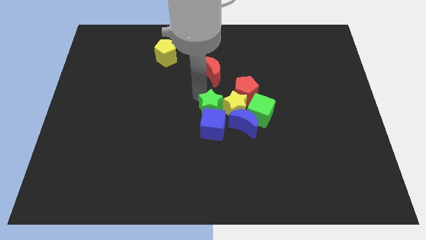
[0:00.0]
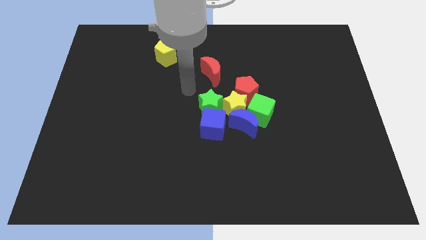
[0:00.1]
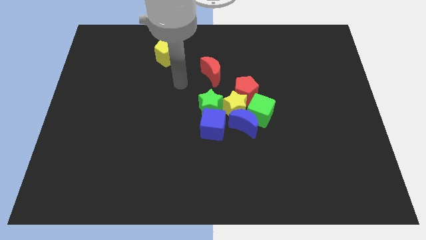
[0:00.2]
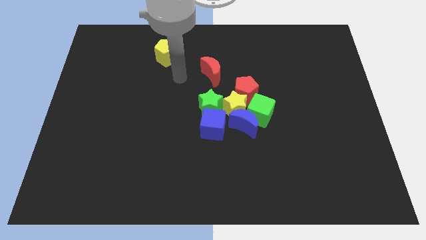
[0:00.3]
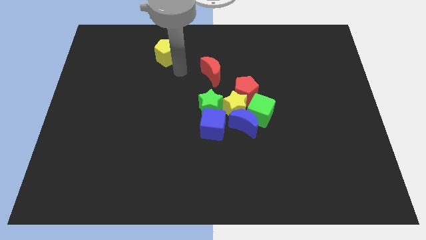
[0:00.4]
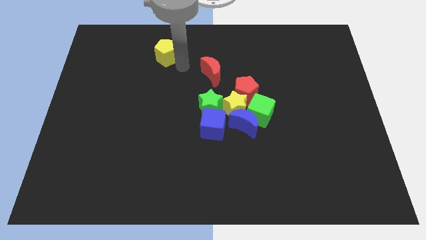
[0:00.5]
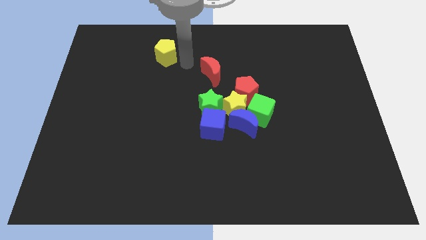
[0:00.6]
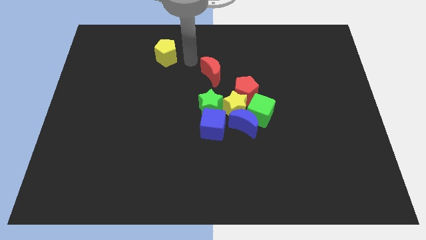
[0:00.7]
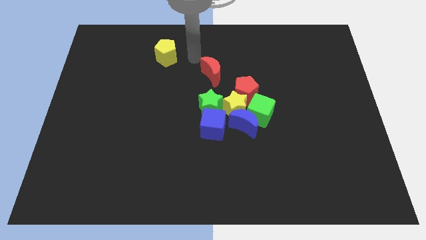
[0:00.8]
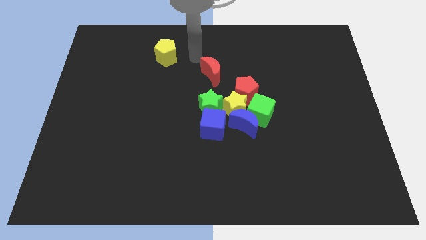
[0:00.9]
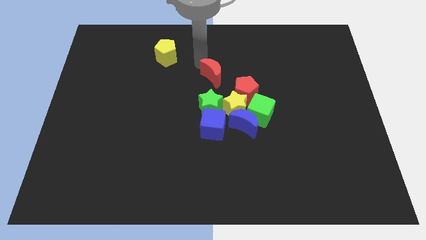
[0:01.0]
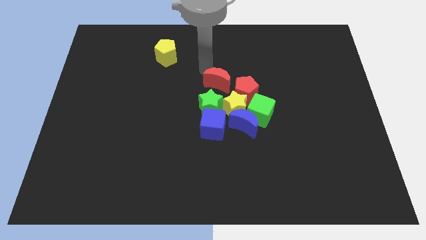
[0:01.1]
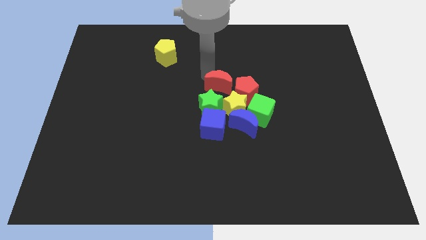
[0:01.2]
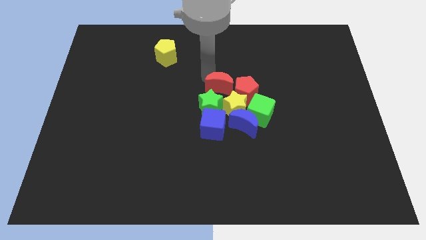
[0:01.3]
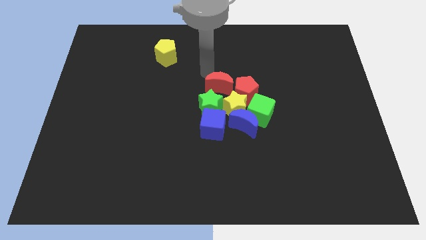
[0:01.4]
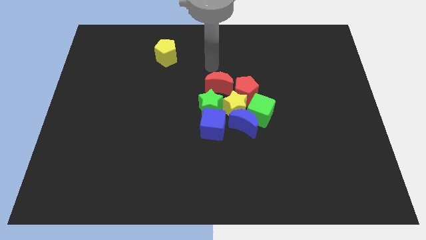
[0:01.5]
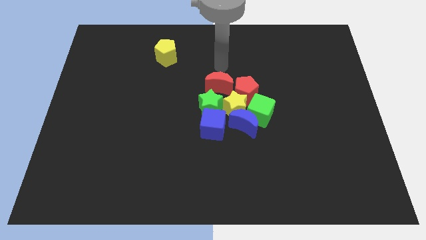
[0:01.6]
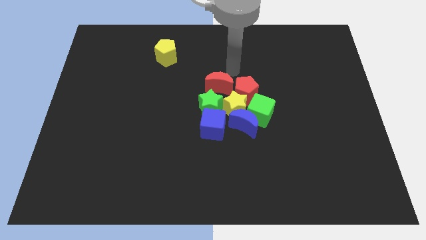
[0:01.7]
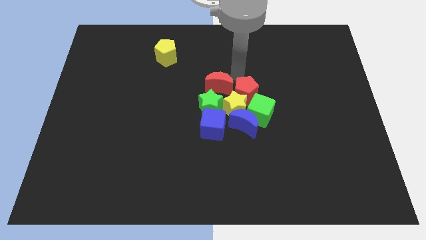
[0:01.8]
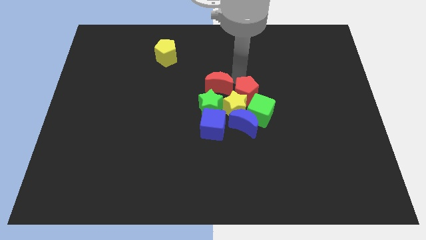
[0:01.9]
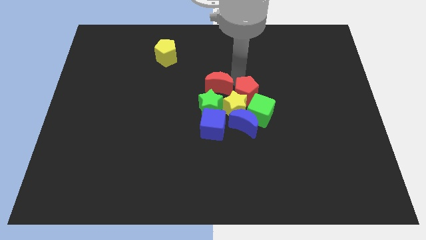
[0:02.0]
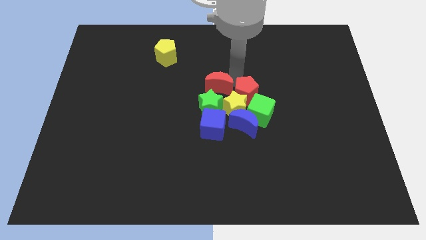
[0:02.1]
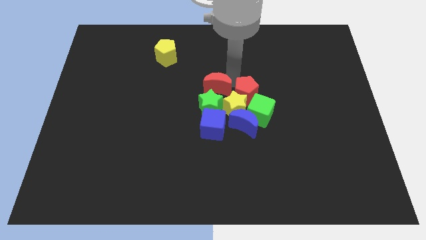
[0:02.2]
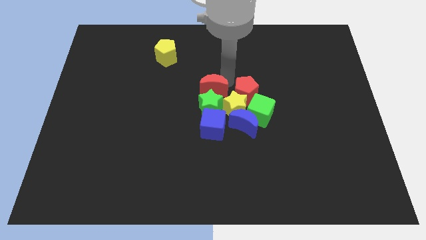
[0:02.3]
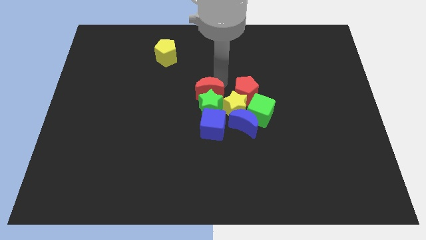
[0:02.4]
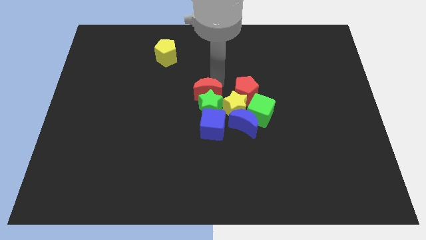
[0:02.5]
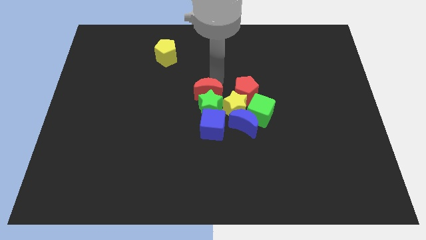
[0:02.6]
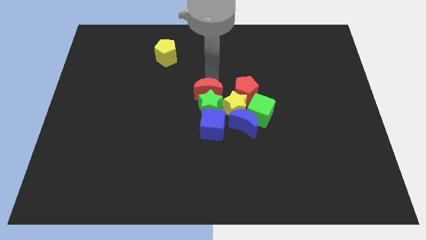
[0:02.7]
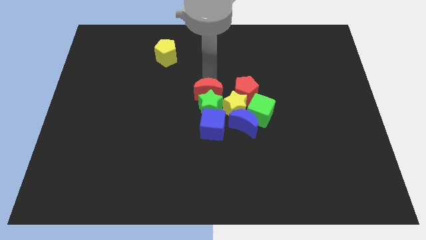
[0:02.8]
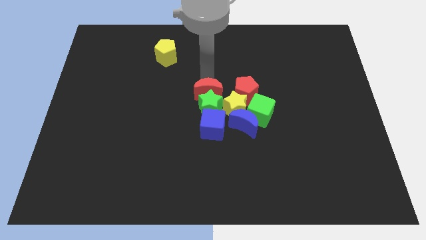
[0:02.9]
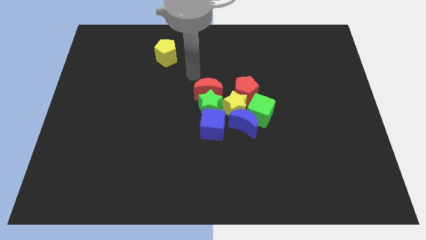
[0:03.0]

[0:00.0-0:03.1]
place the red moon on the top of the green star

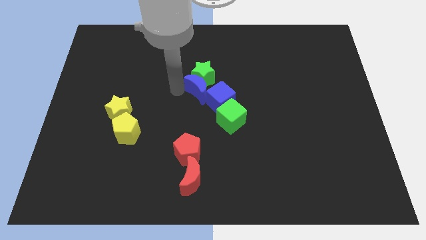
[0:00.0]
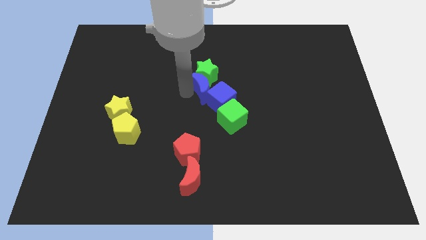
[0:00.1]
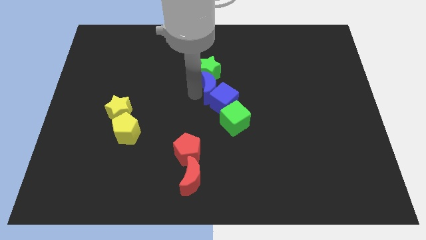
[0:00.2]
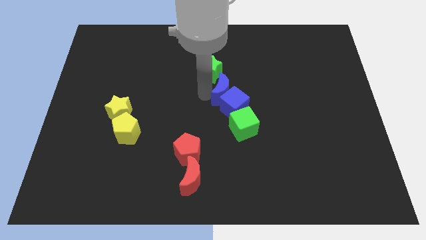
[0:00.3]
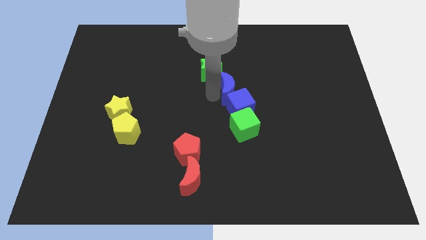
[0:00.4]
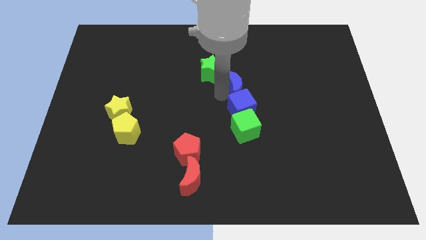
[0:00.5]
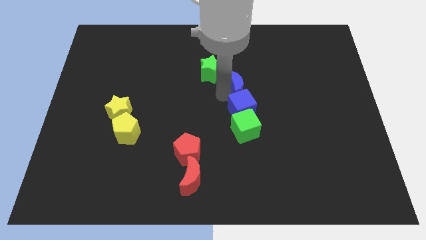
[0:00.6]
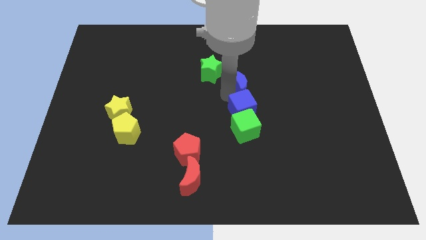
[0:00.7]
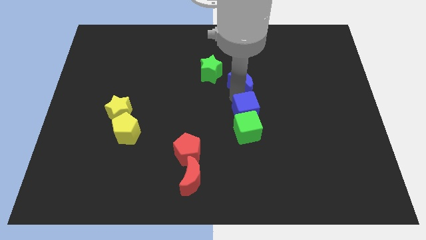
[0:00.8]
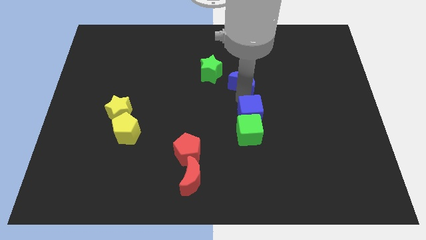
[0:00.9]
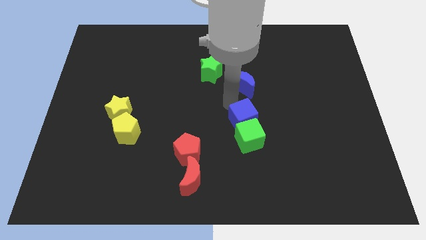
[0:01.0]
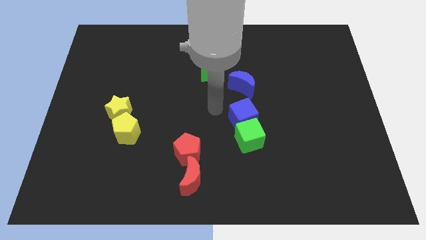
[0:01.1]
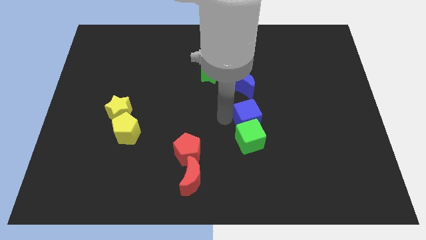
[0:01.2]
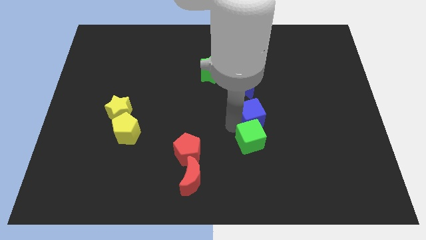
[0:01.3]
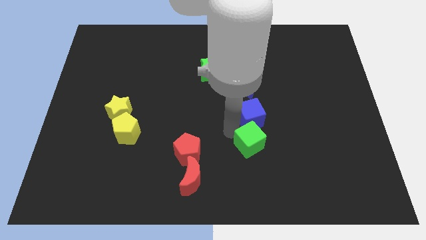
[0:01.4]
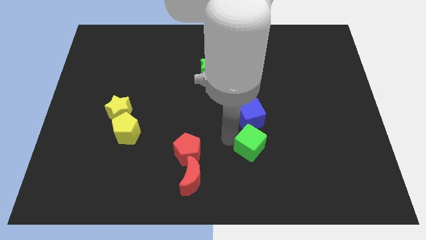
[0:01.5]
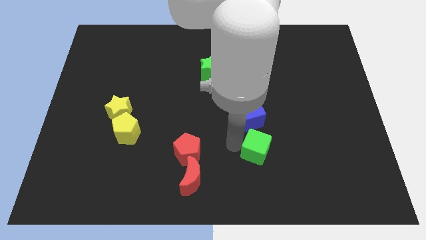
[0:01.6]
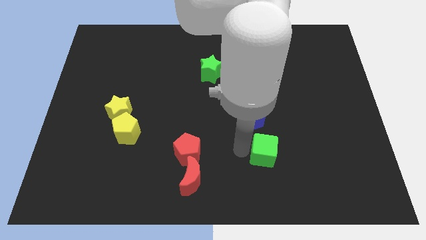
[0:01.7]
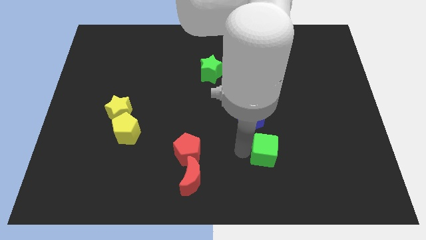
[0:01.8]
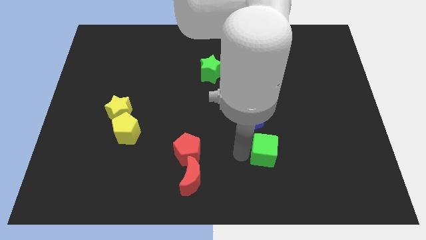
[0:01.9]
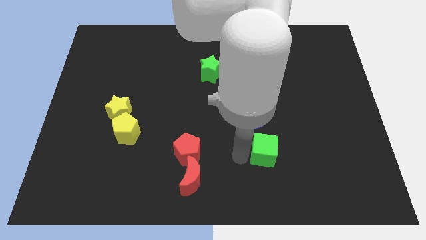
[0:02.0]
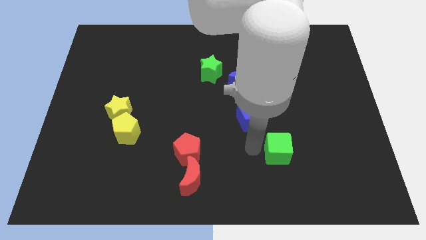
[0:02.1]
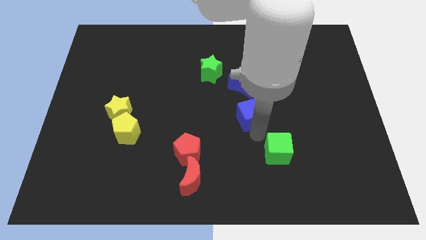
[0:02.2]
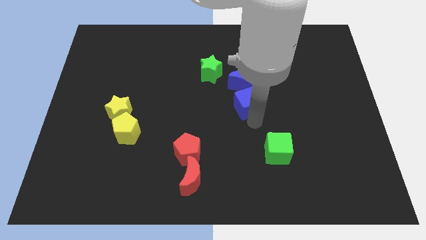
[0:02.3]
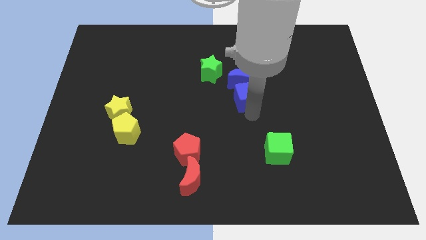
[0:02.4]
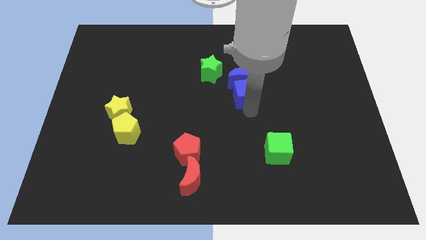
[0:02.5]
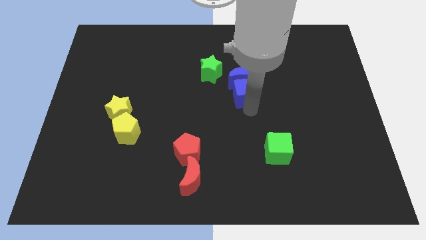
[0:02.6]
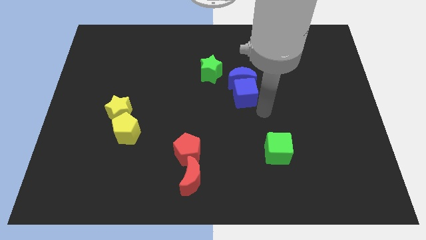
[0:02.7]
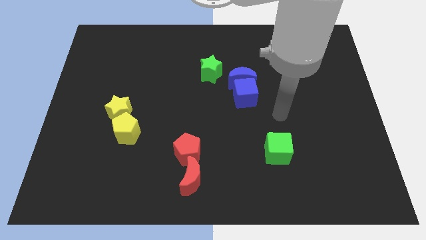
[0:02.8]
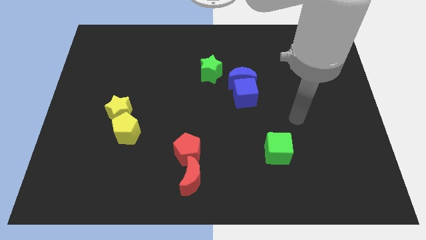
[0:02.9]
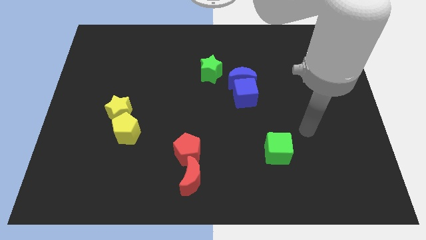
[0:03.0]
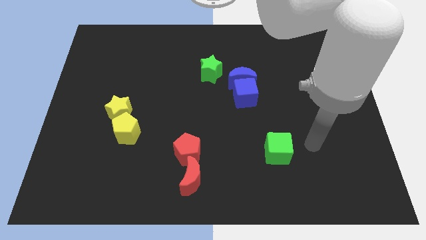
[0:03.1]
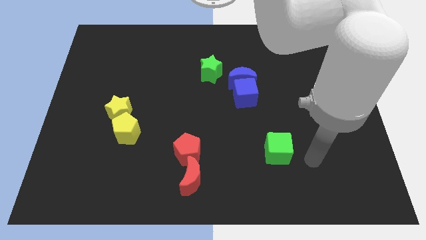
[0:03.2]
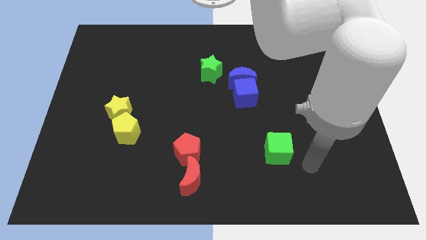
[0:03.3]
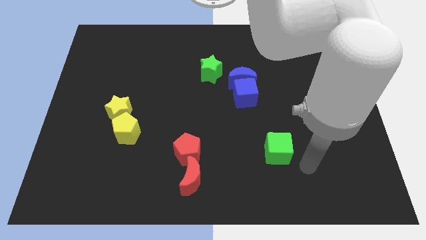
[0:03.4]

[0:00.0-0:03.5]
place the blue cube below the blue moon

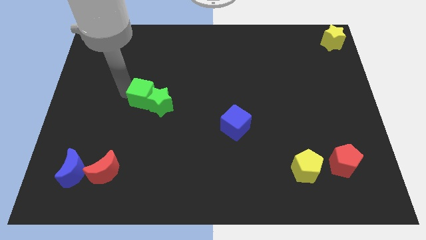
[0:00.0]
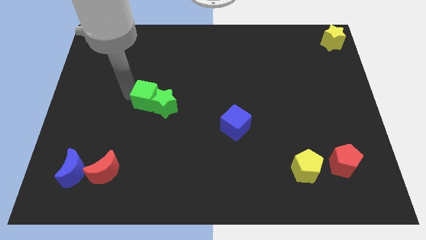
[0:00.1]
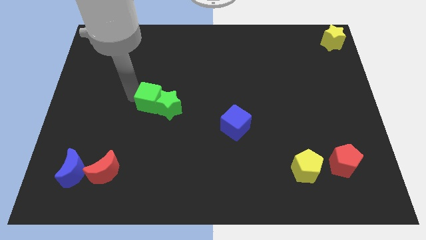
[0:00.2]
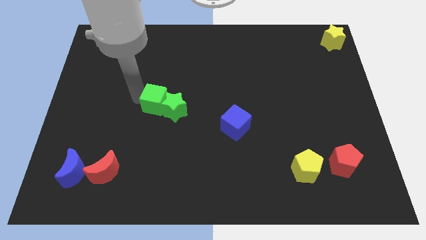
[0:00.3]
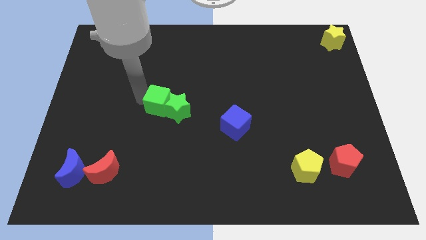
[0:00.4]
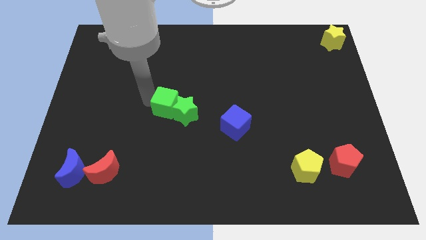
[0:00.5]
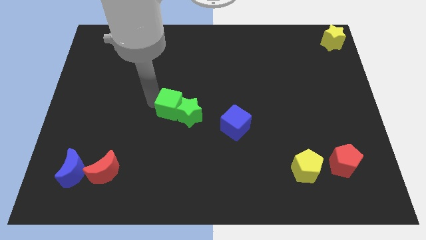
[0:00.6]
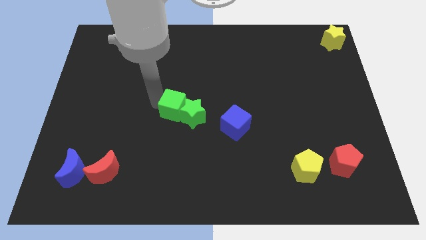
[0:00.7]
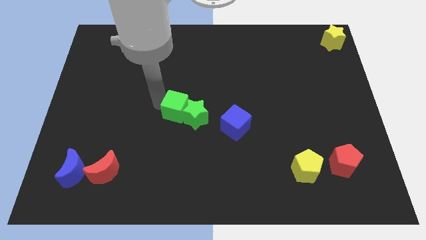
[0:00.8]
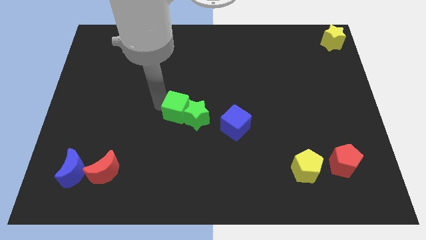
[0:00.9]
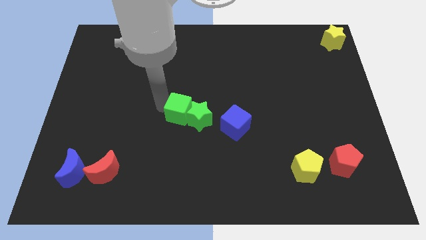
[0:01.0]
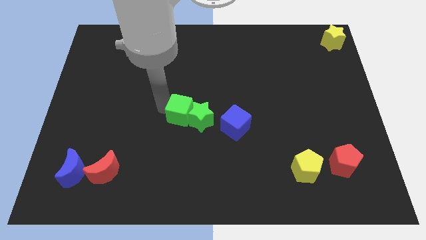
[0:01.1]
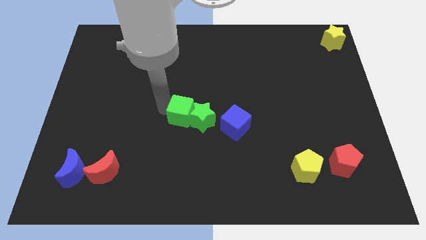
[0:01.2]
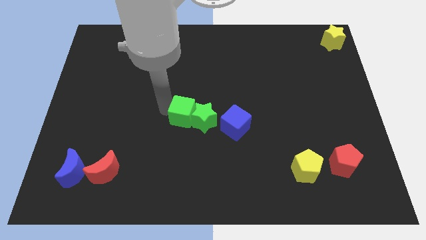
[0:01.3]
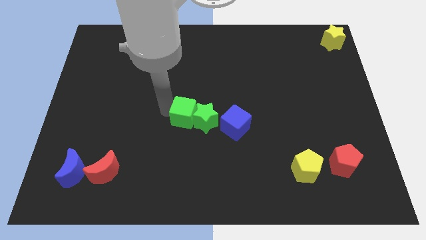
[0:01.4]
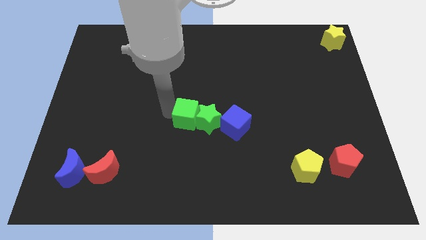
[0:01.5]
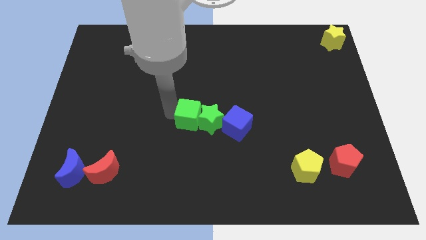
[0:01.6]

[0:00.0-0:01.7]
drag the both green blocks to touch the left side of the blue cube

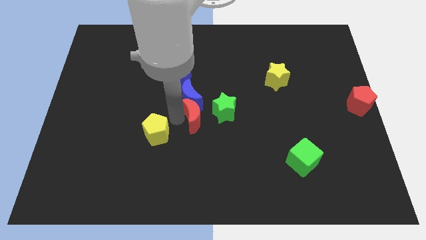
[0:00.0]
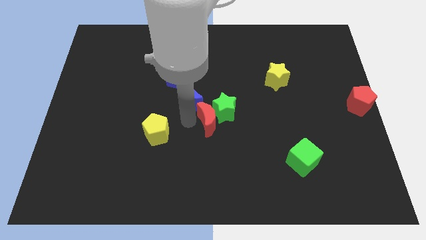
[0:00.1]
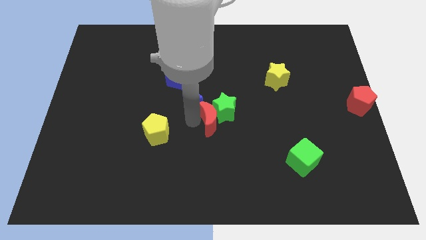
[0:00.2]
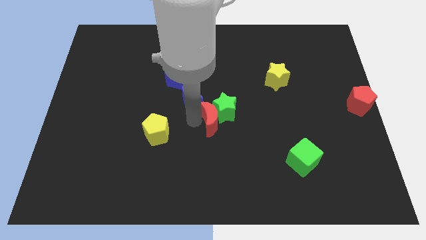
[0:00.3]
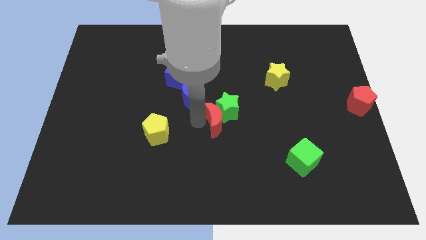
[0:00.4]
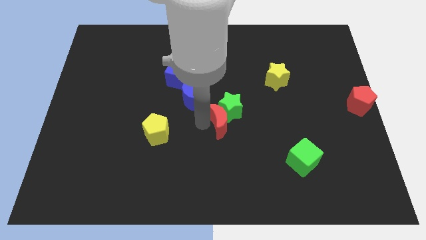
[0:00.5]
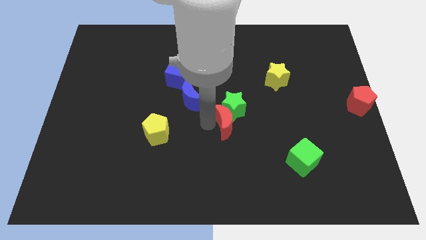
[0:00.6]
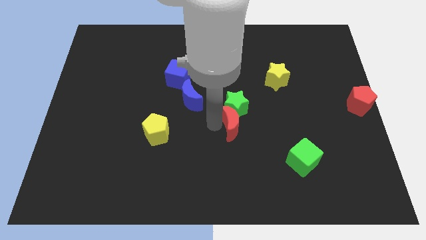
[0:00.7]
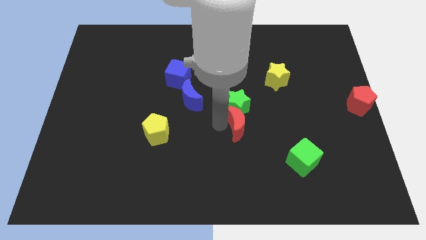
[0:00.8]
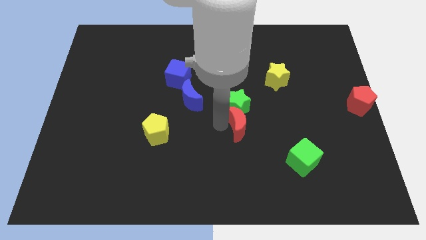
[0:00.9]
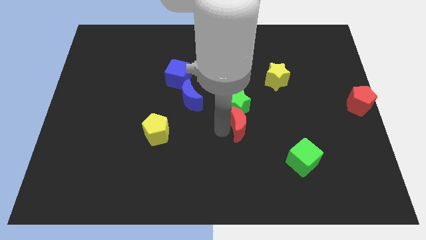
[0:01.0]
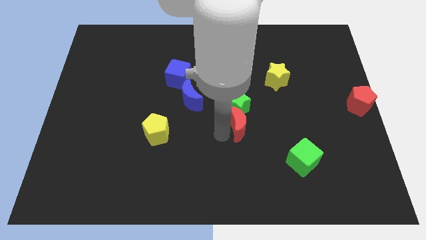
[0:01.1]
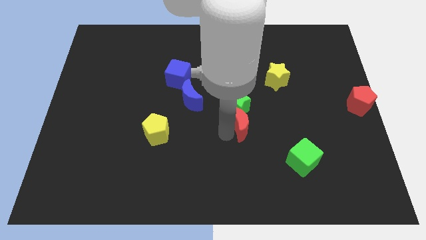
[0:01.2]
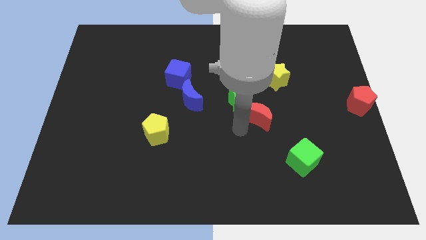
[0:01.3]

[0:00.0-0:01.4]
push red crescent below green star
